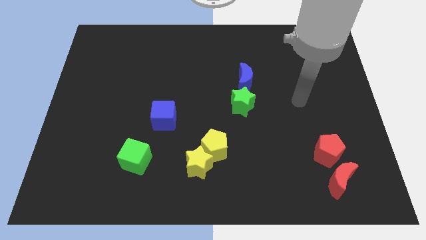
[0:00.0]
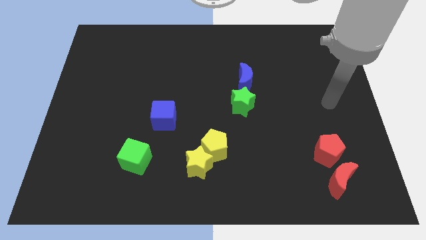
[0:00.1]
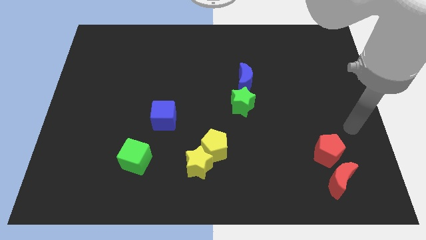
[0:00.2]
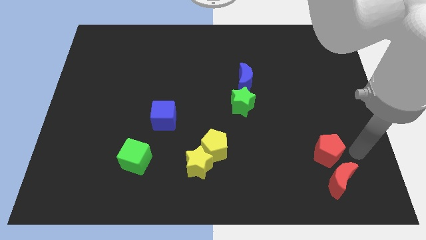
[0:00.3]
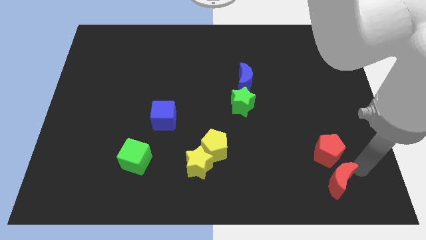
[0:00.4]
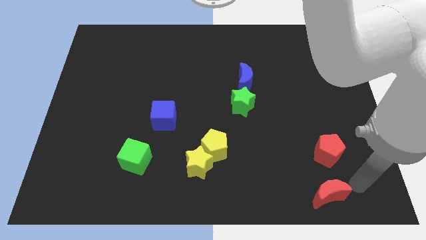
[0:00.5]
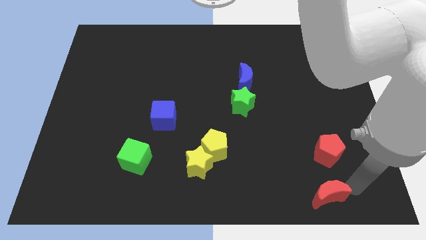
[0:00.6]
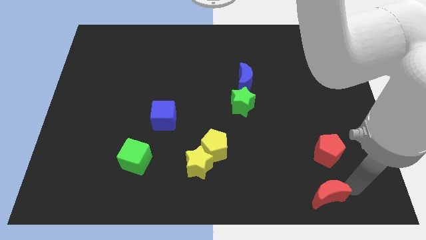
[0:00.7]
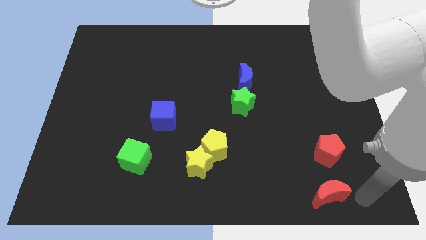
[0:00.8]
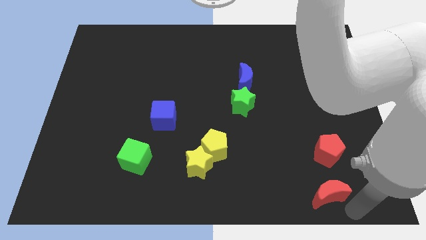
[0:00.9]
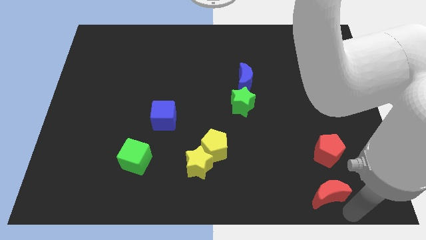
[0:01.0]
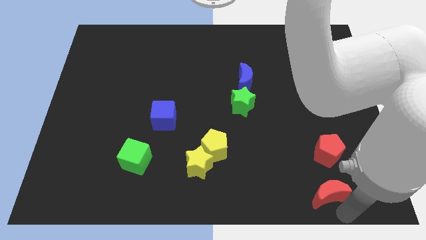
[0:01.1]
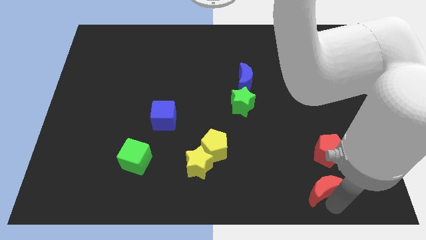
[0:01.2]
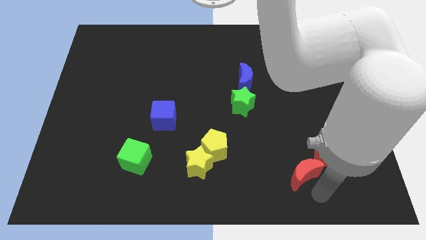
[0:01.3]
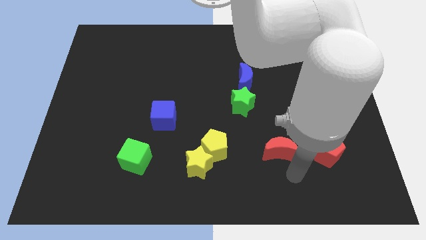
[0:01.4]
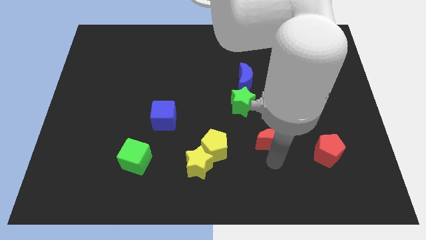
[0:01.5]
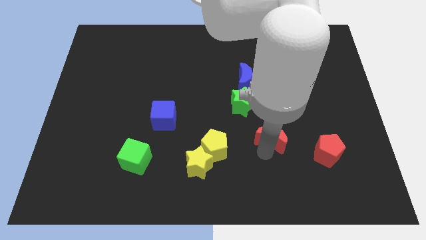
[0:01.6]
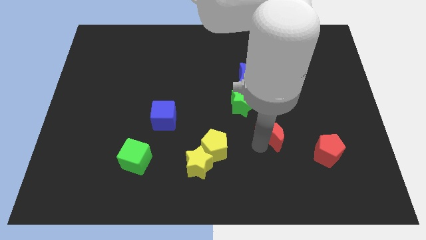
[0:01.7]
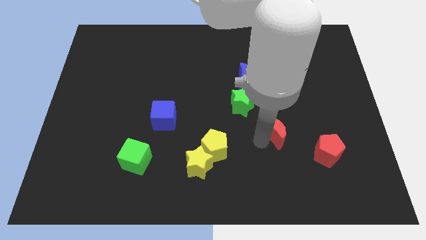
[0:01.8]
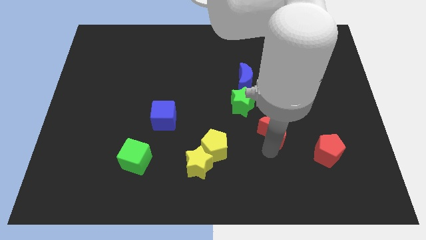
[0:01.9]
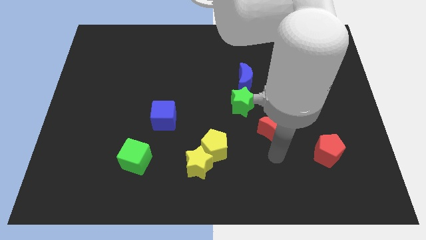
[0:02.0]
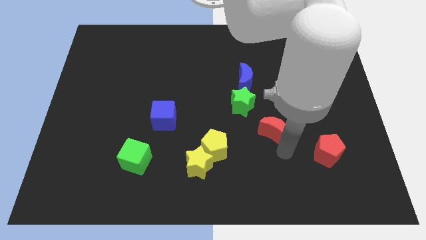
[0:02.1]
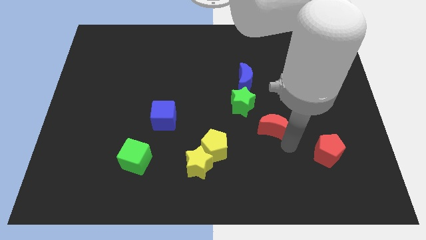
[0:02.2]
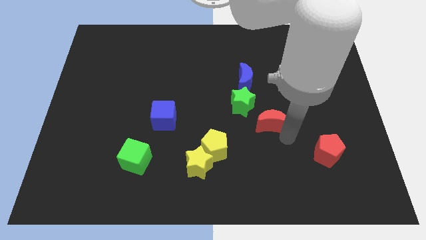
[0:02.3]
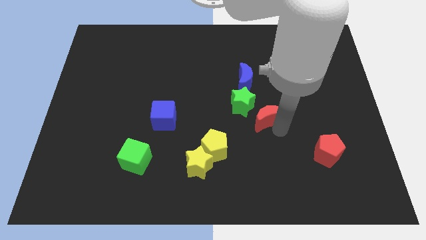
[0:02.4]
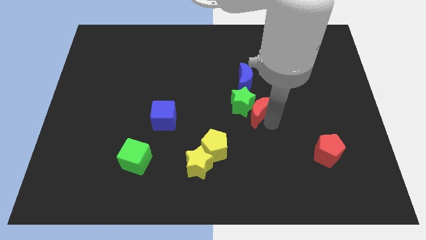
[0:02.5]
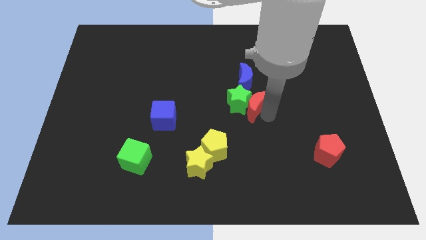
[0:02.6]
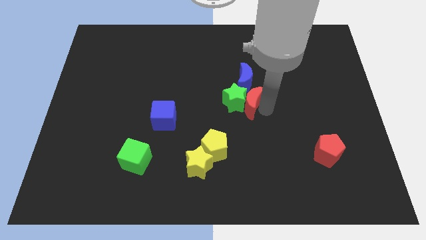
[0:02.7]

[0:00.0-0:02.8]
push the red moon to the green star

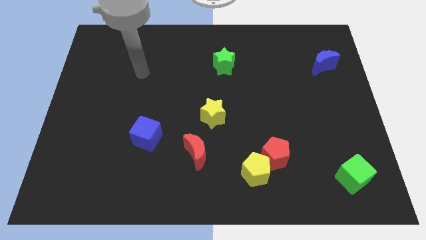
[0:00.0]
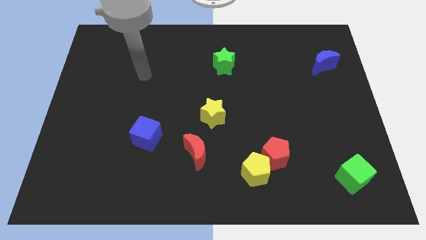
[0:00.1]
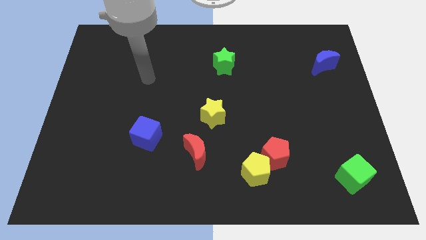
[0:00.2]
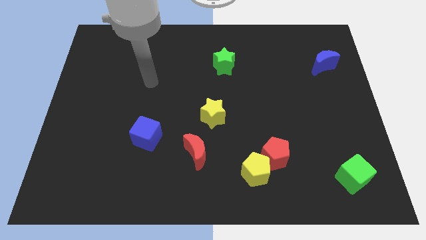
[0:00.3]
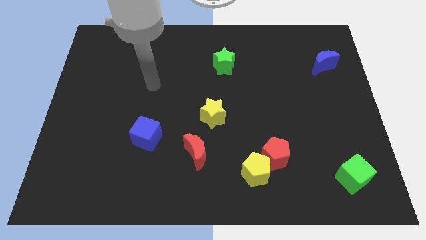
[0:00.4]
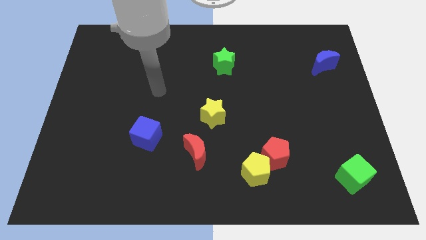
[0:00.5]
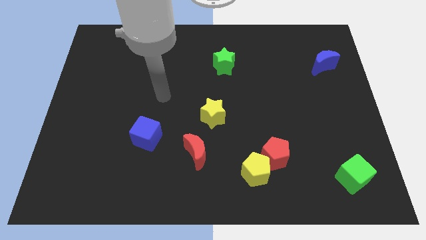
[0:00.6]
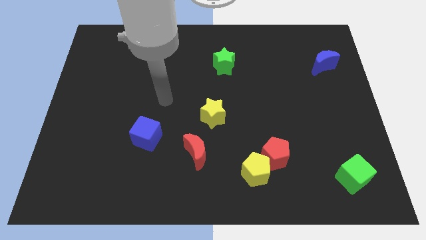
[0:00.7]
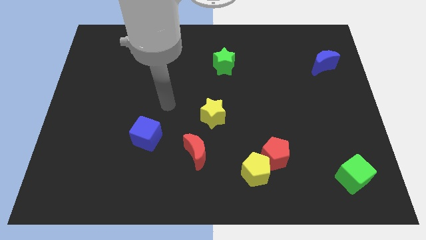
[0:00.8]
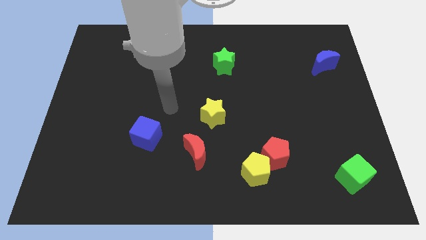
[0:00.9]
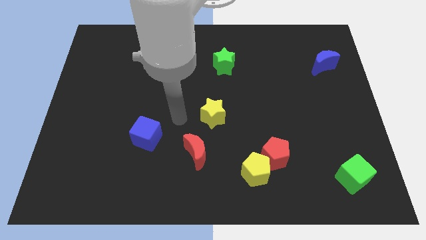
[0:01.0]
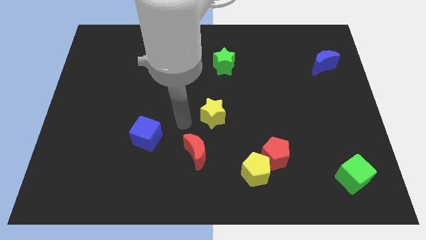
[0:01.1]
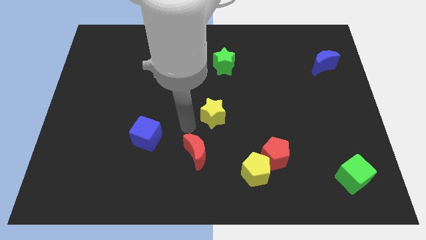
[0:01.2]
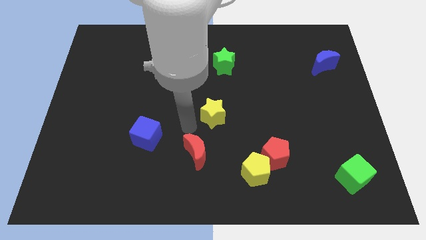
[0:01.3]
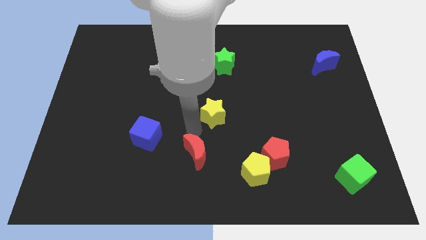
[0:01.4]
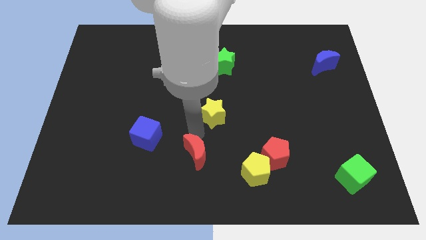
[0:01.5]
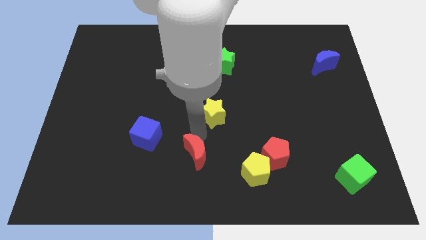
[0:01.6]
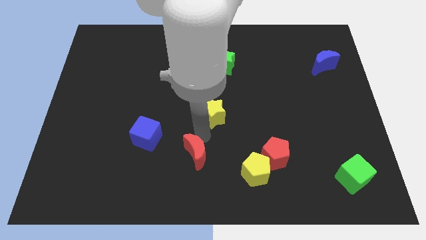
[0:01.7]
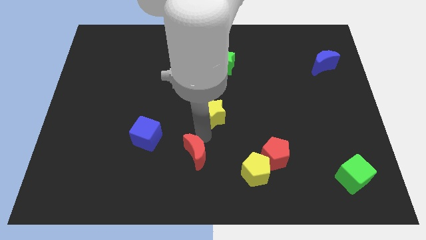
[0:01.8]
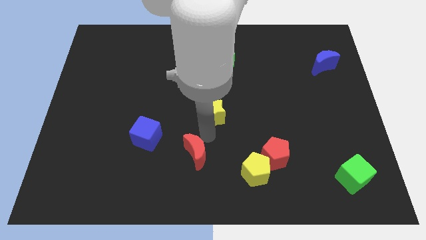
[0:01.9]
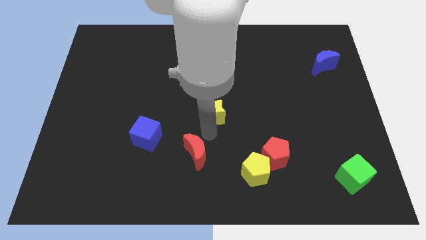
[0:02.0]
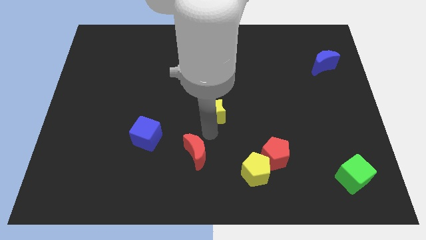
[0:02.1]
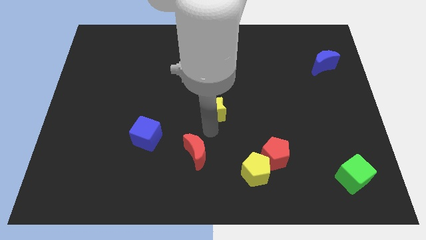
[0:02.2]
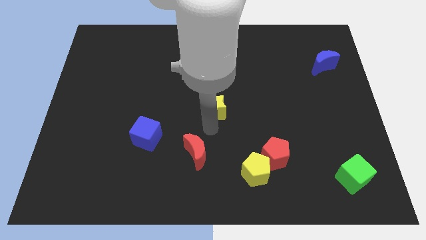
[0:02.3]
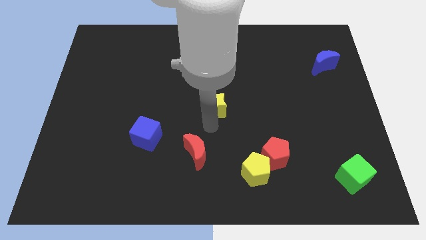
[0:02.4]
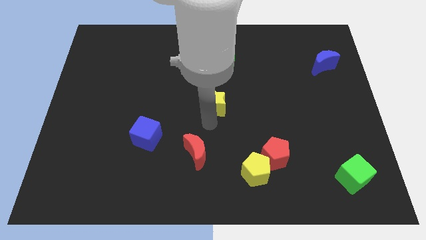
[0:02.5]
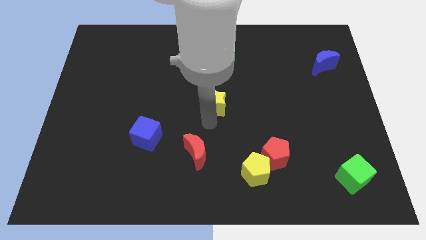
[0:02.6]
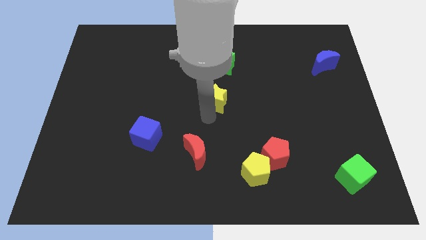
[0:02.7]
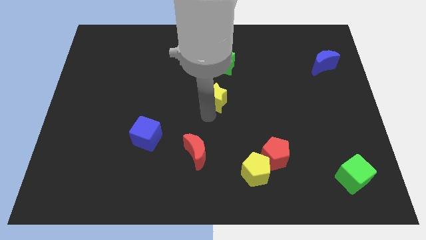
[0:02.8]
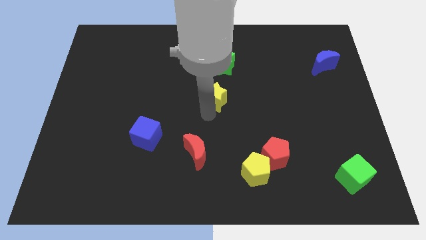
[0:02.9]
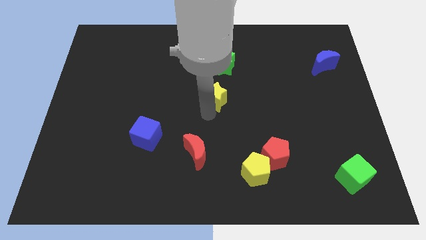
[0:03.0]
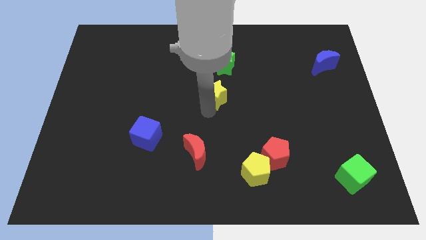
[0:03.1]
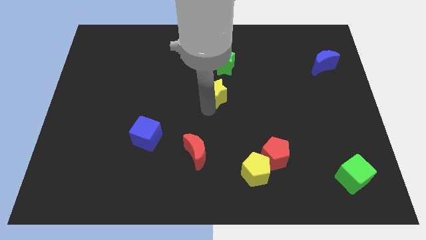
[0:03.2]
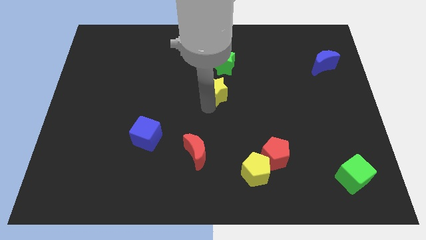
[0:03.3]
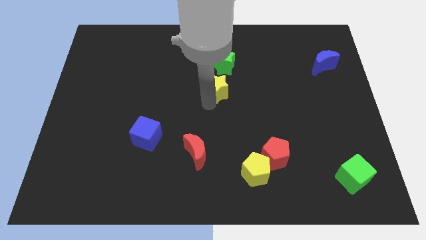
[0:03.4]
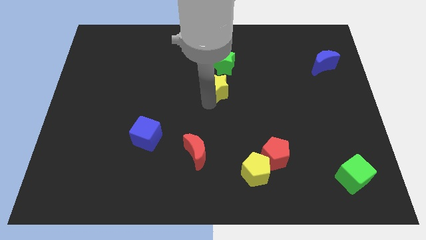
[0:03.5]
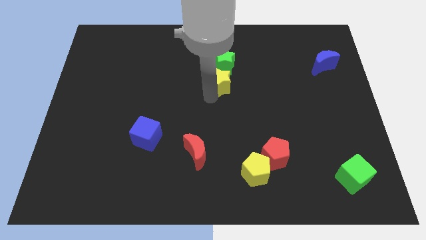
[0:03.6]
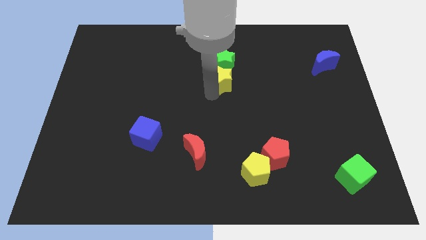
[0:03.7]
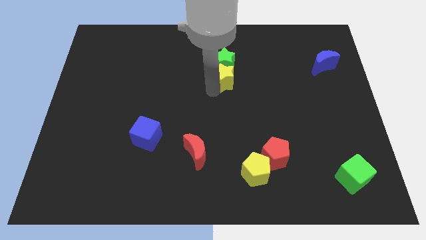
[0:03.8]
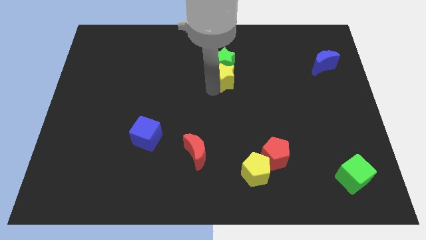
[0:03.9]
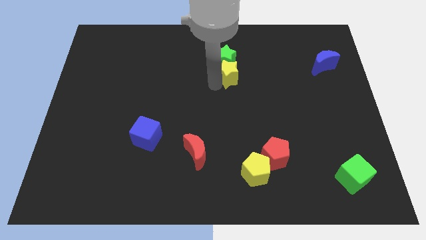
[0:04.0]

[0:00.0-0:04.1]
slide the yellow star close to the green star

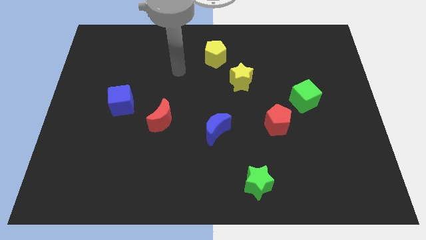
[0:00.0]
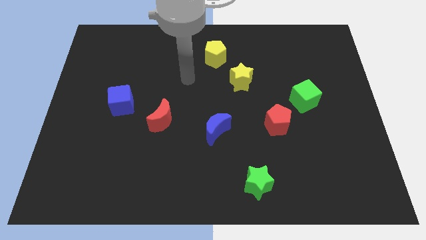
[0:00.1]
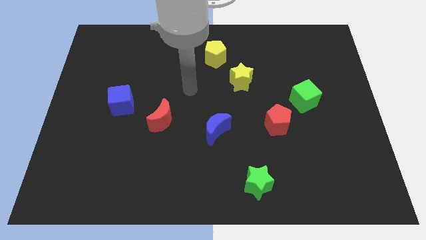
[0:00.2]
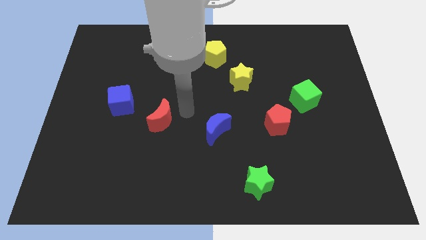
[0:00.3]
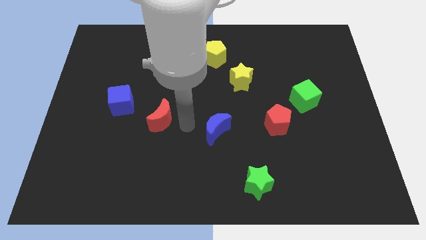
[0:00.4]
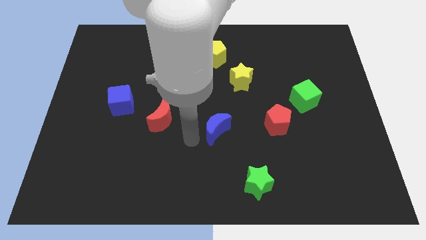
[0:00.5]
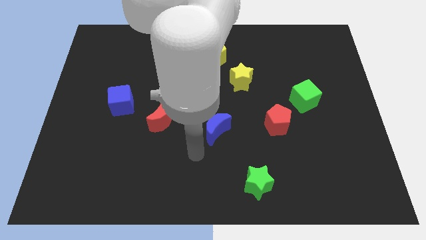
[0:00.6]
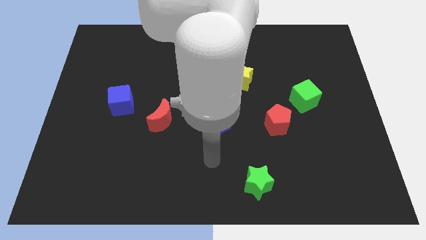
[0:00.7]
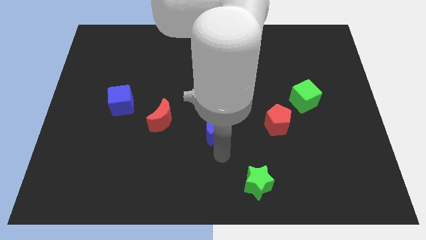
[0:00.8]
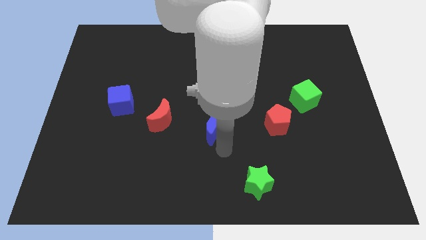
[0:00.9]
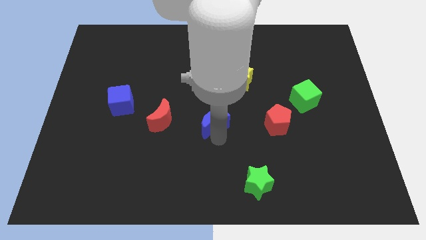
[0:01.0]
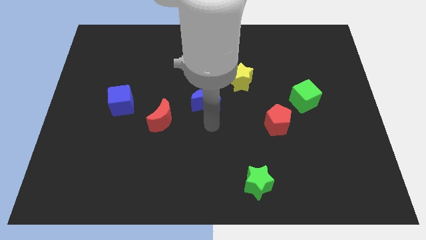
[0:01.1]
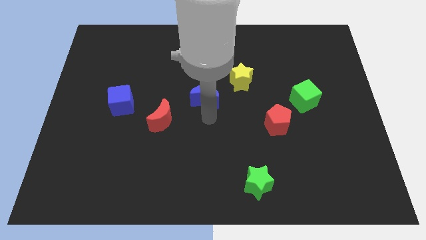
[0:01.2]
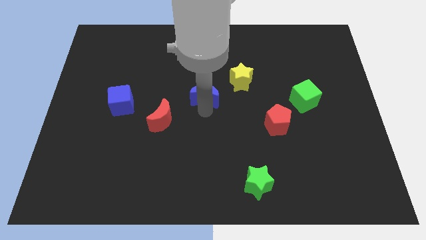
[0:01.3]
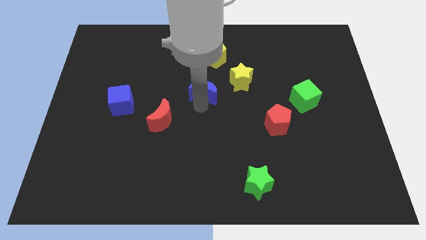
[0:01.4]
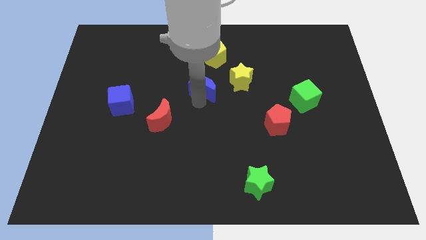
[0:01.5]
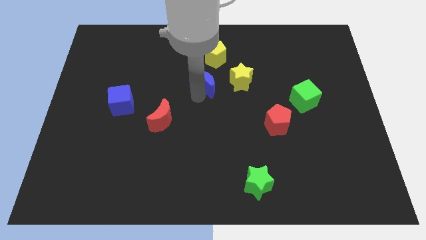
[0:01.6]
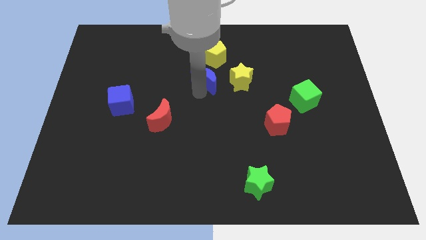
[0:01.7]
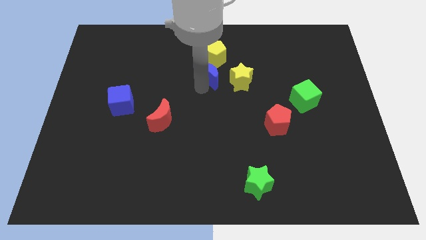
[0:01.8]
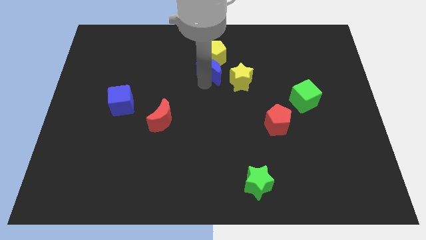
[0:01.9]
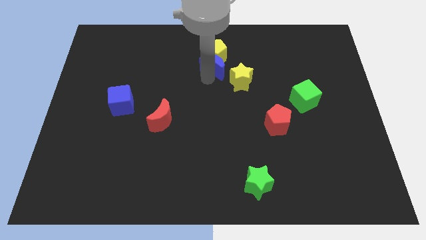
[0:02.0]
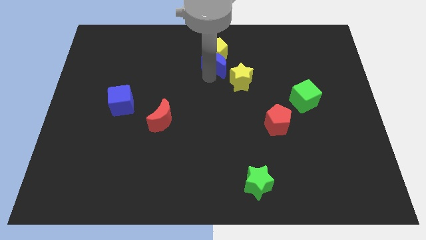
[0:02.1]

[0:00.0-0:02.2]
push the blue moon next to the yellow pentagon
